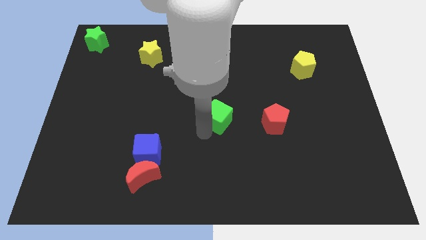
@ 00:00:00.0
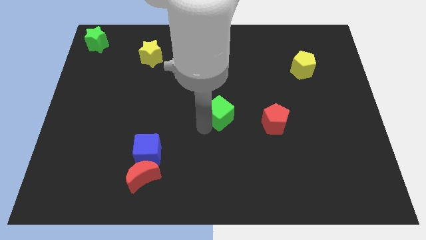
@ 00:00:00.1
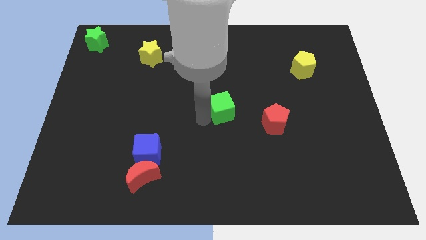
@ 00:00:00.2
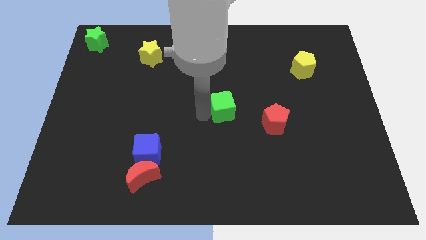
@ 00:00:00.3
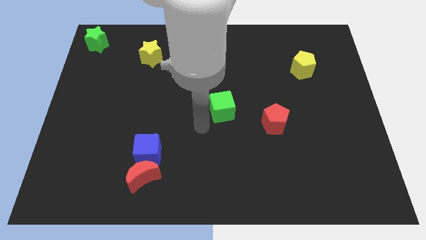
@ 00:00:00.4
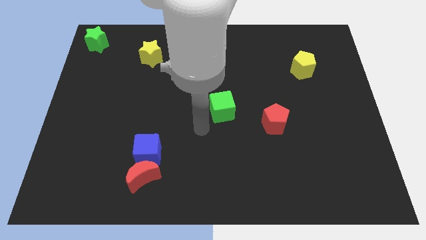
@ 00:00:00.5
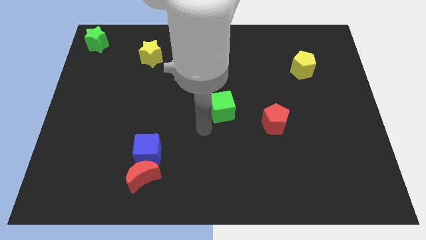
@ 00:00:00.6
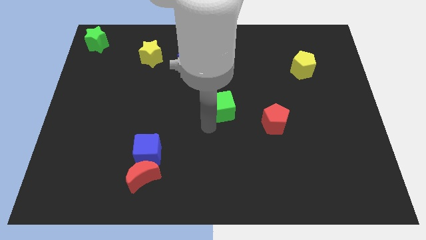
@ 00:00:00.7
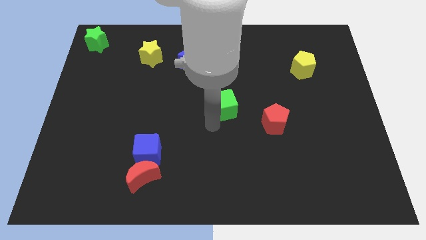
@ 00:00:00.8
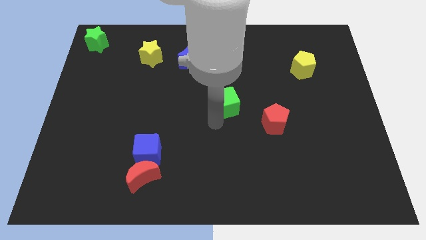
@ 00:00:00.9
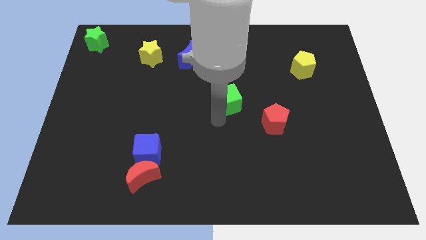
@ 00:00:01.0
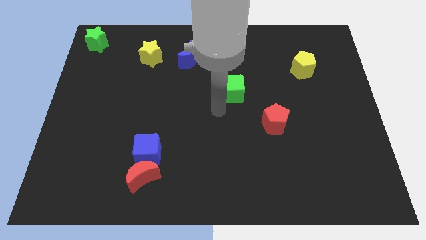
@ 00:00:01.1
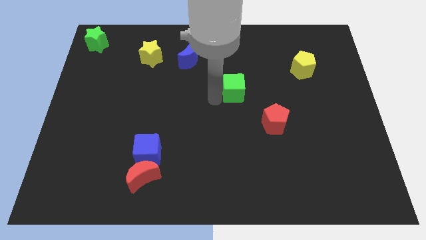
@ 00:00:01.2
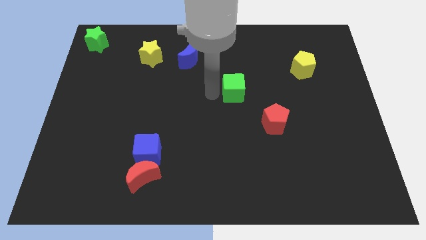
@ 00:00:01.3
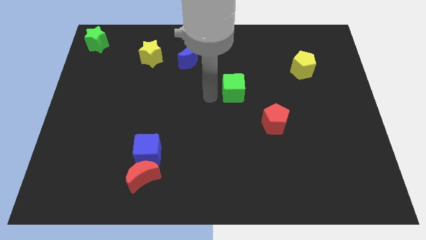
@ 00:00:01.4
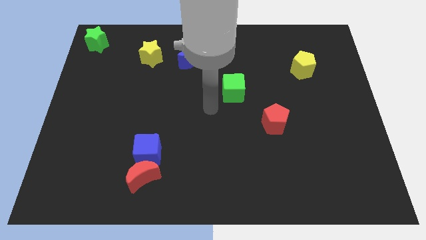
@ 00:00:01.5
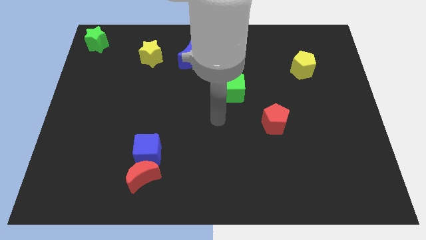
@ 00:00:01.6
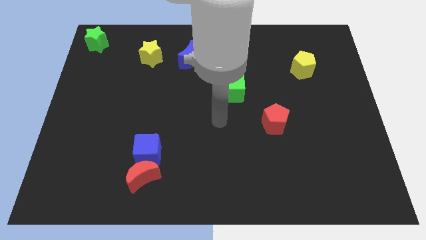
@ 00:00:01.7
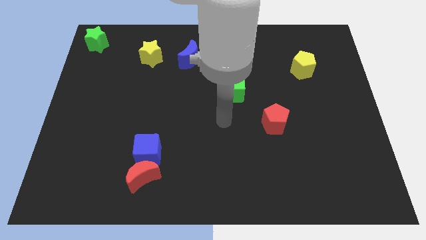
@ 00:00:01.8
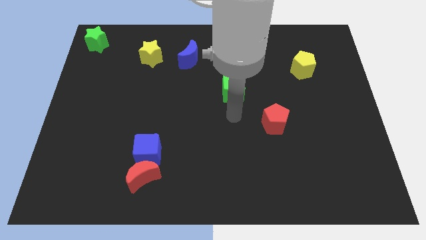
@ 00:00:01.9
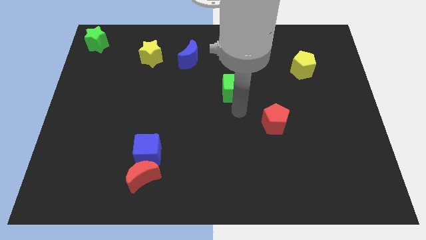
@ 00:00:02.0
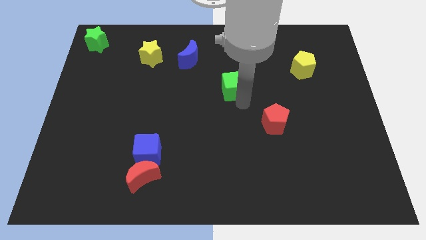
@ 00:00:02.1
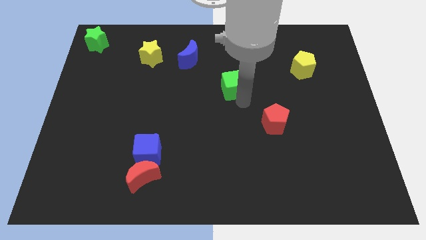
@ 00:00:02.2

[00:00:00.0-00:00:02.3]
place the green cube in between red pentagon and blue moon

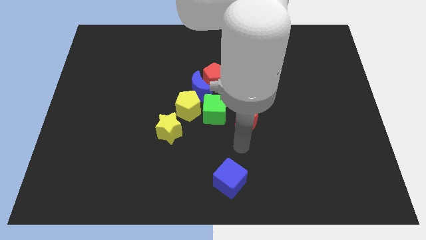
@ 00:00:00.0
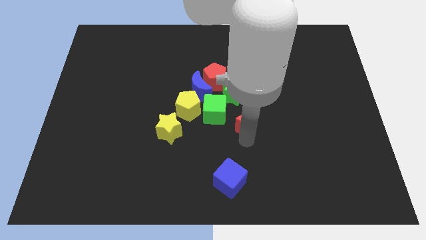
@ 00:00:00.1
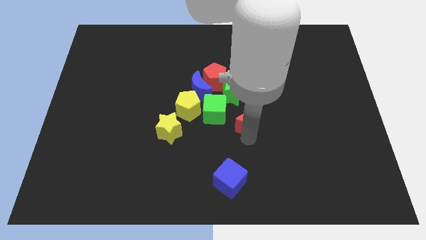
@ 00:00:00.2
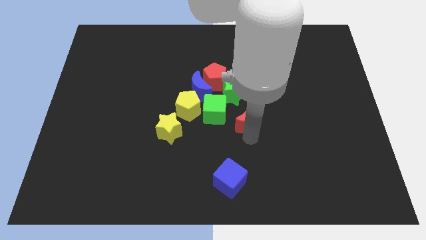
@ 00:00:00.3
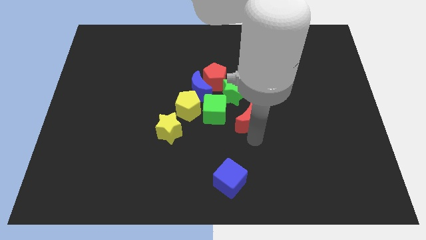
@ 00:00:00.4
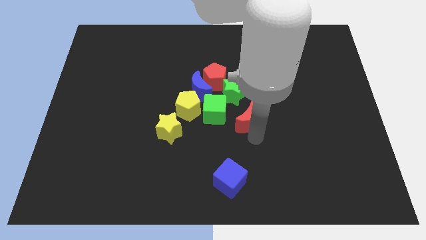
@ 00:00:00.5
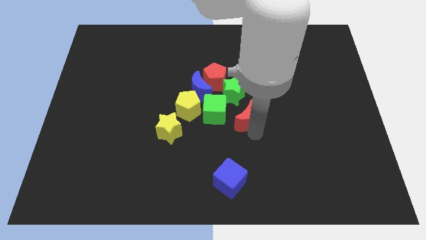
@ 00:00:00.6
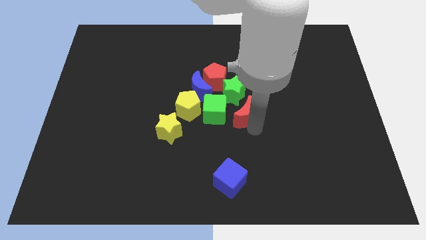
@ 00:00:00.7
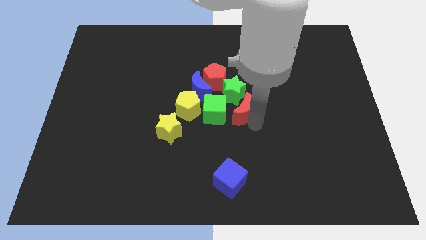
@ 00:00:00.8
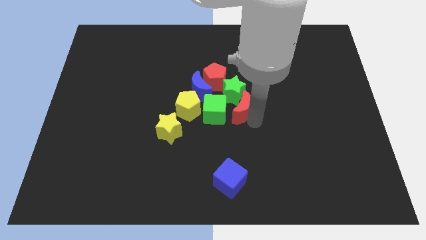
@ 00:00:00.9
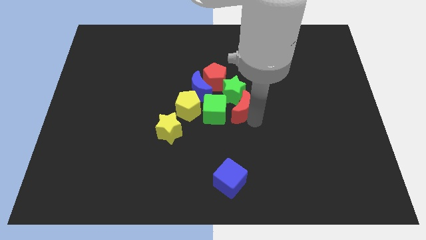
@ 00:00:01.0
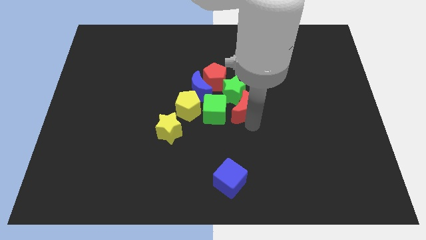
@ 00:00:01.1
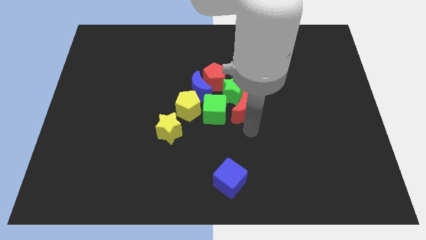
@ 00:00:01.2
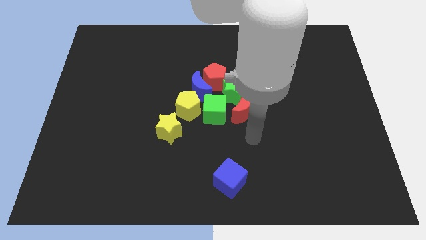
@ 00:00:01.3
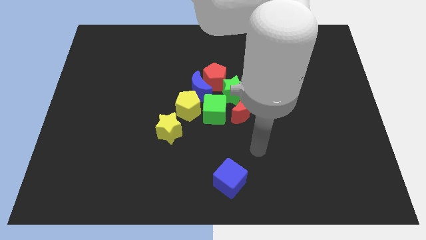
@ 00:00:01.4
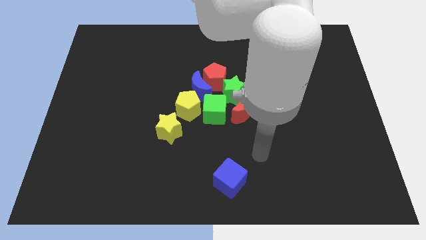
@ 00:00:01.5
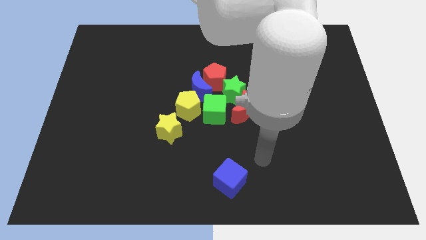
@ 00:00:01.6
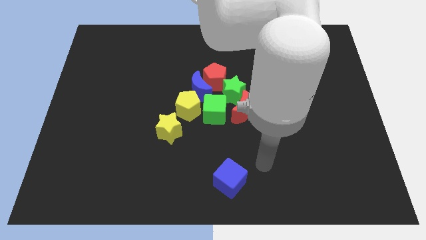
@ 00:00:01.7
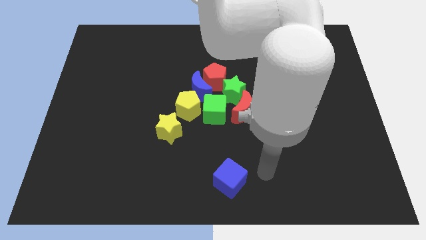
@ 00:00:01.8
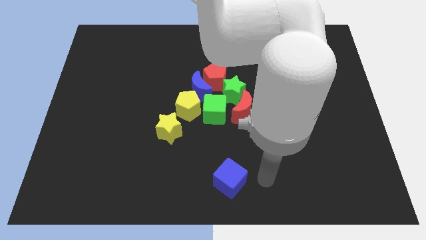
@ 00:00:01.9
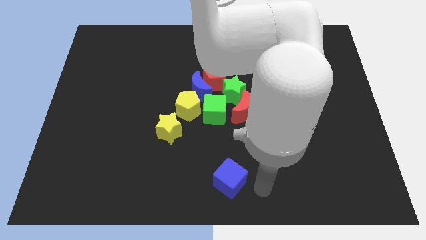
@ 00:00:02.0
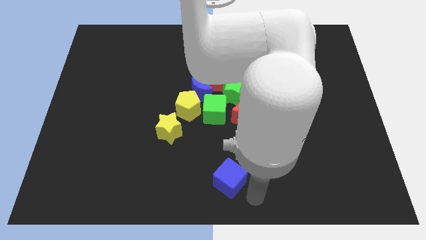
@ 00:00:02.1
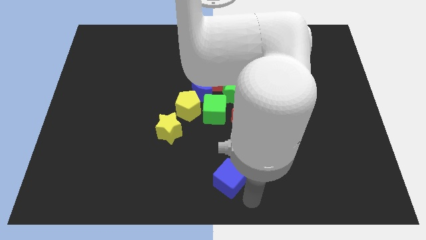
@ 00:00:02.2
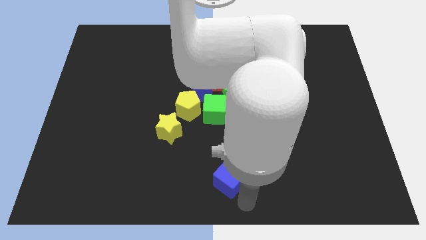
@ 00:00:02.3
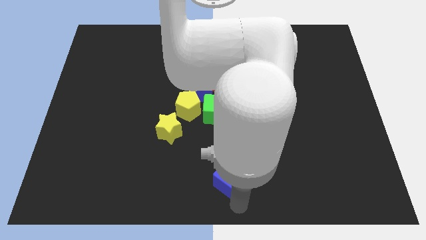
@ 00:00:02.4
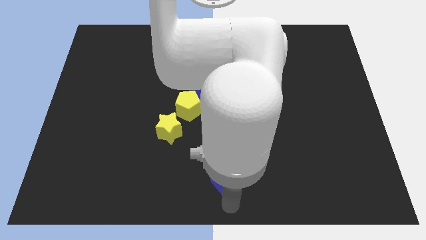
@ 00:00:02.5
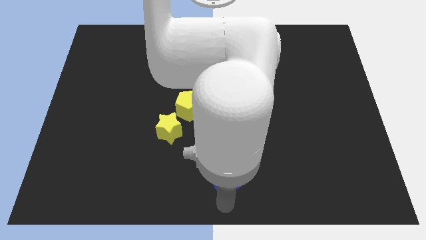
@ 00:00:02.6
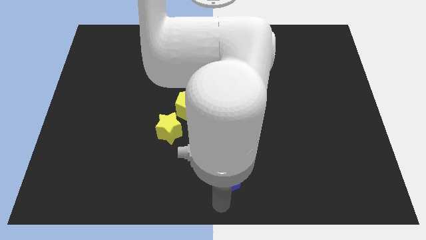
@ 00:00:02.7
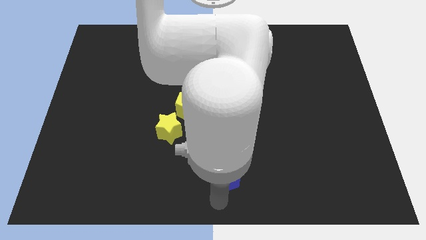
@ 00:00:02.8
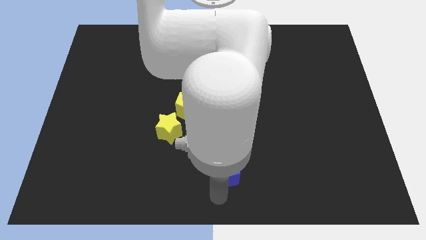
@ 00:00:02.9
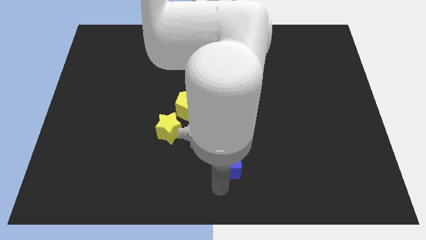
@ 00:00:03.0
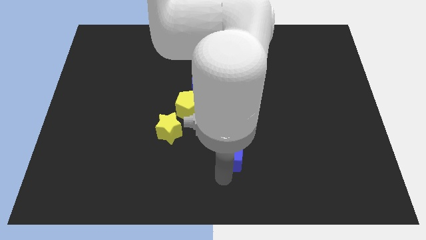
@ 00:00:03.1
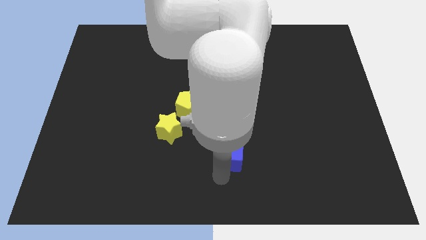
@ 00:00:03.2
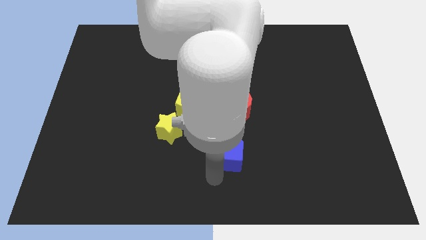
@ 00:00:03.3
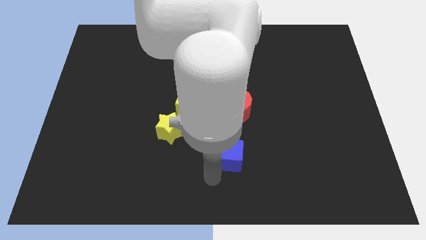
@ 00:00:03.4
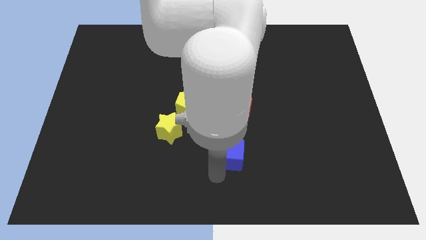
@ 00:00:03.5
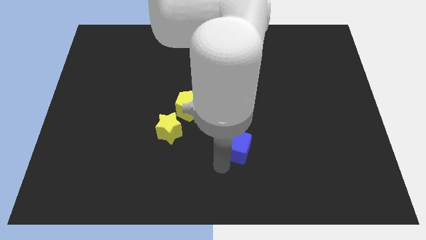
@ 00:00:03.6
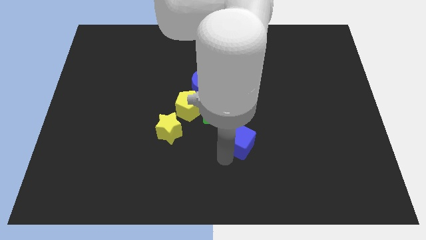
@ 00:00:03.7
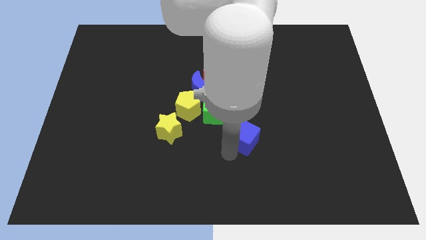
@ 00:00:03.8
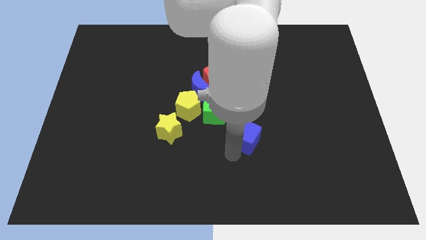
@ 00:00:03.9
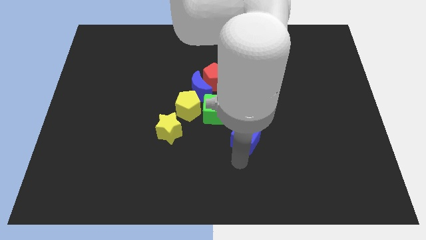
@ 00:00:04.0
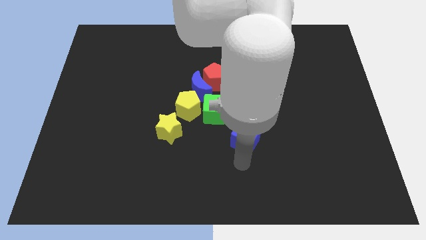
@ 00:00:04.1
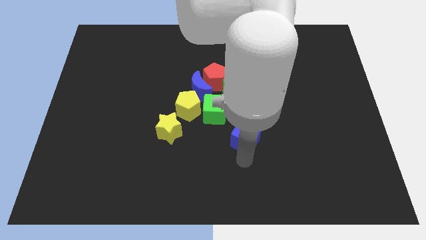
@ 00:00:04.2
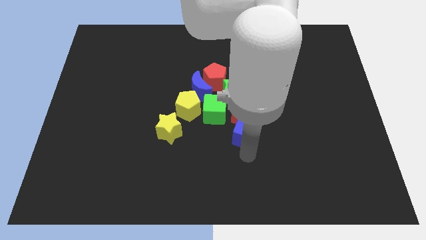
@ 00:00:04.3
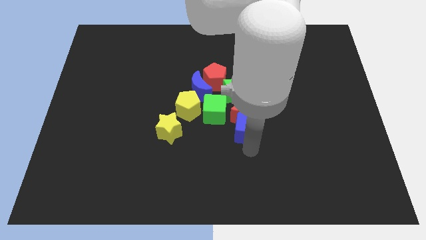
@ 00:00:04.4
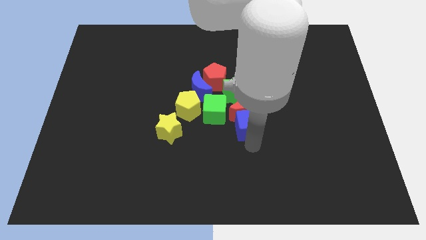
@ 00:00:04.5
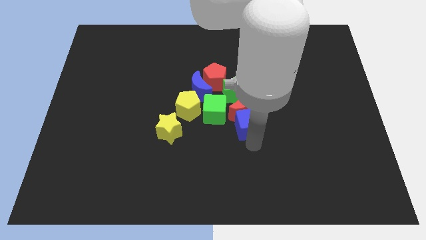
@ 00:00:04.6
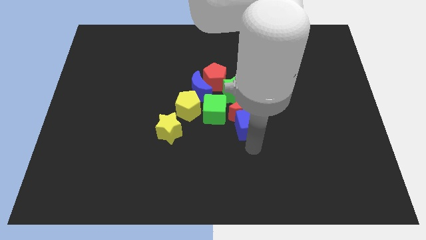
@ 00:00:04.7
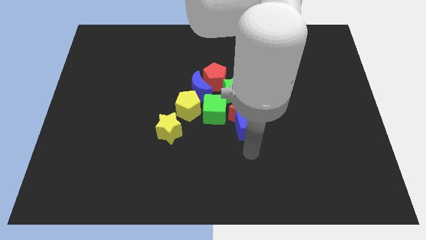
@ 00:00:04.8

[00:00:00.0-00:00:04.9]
move the red crescent and blue cube to the center of the board

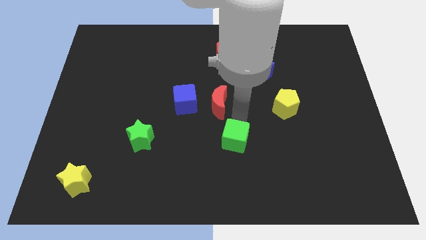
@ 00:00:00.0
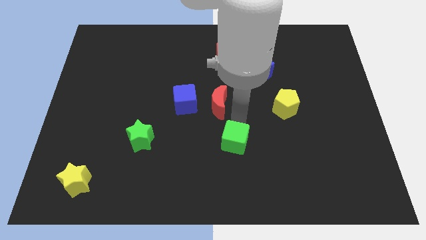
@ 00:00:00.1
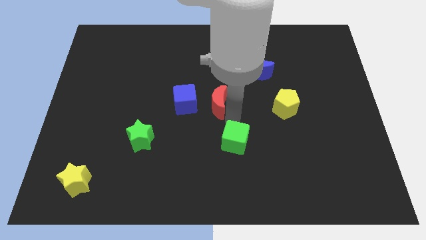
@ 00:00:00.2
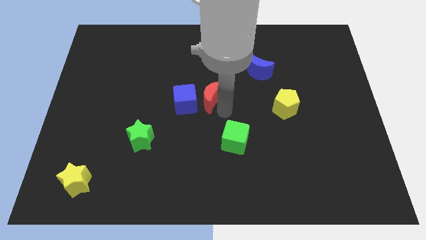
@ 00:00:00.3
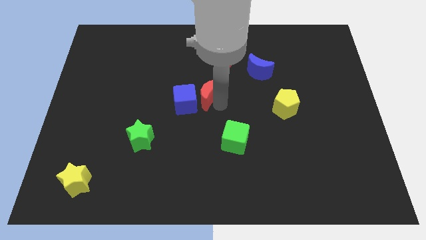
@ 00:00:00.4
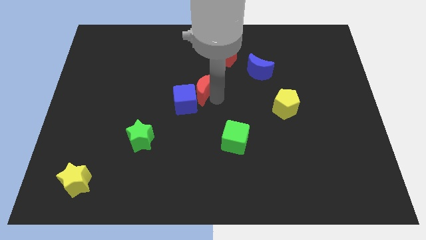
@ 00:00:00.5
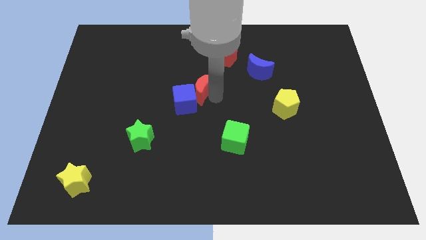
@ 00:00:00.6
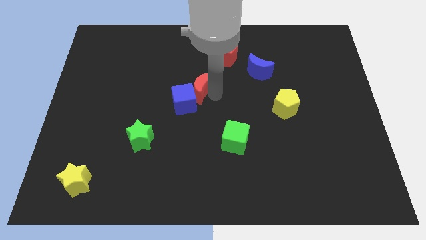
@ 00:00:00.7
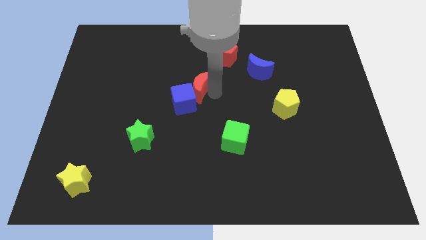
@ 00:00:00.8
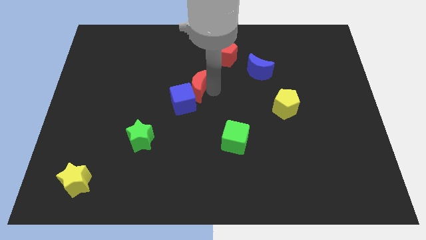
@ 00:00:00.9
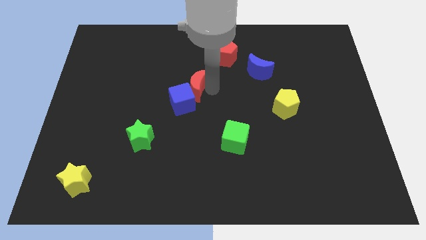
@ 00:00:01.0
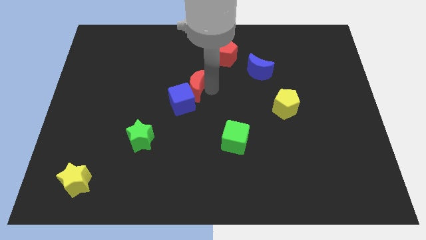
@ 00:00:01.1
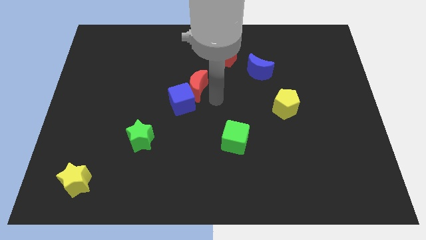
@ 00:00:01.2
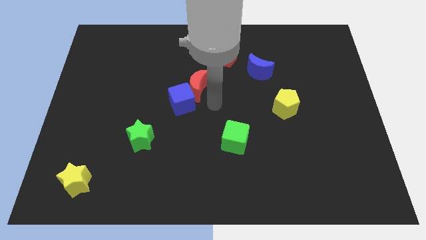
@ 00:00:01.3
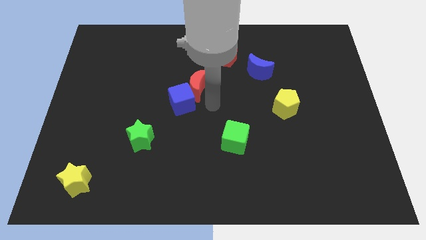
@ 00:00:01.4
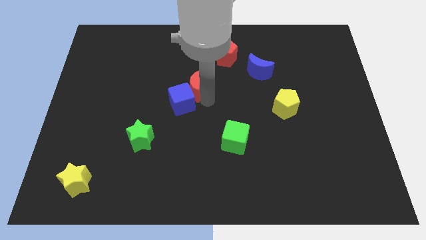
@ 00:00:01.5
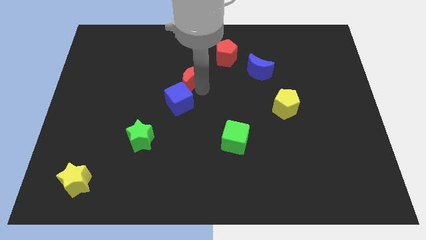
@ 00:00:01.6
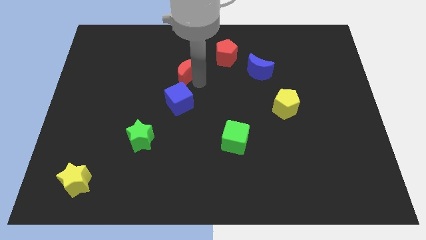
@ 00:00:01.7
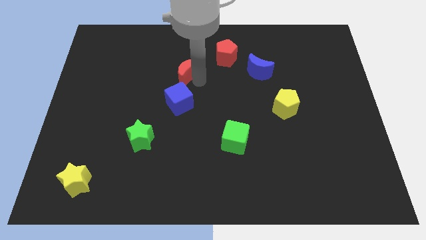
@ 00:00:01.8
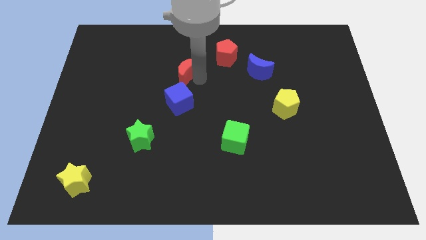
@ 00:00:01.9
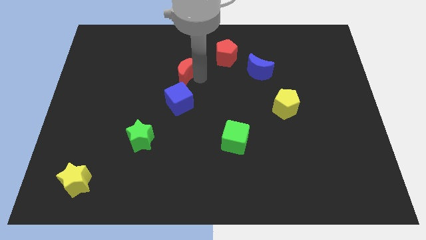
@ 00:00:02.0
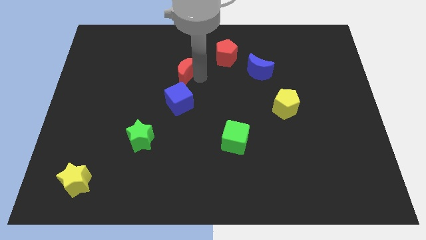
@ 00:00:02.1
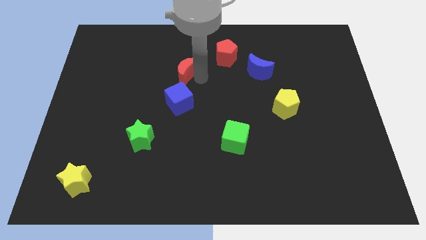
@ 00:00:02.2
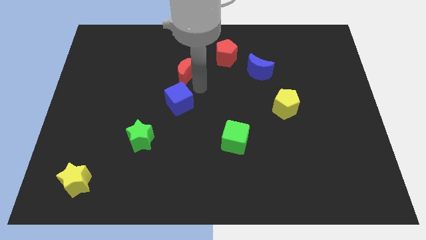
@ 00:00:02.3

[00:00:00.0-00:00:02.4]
move the red crescent on top of blue cube
